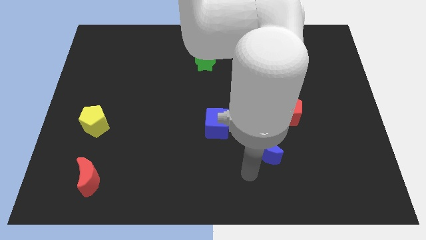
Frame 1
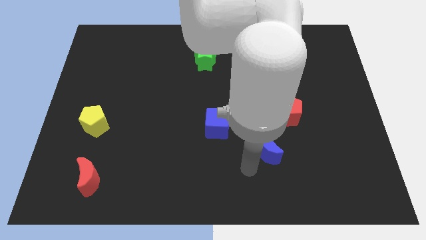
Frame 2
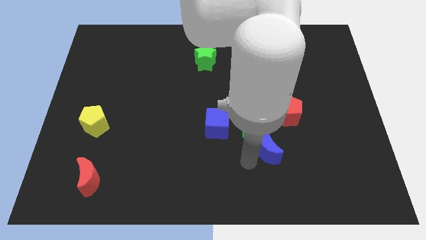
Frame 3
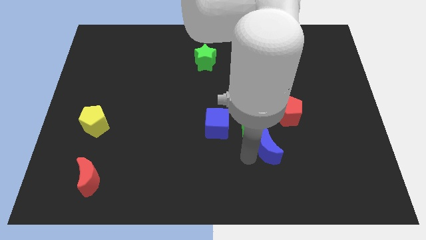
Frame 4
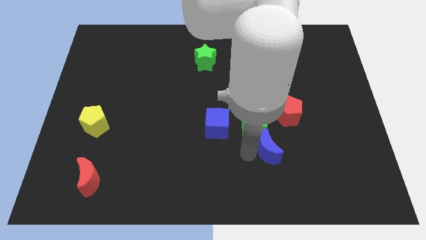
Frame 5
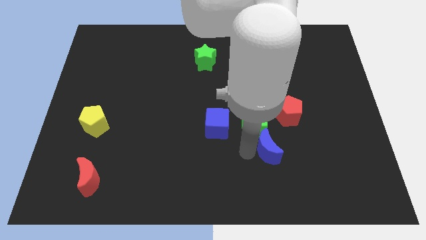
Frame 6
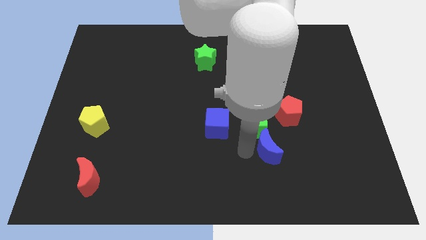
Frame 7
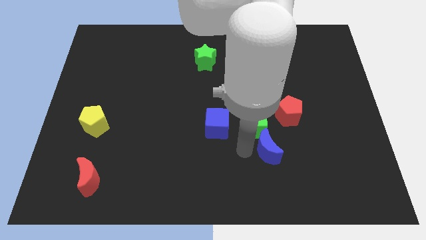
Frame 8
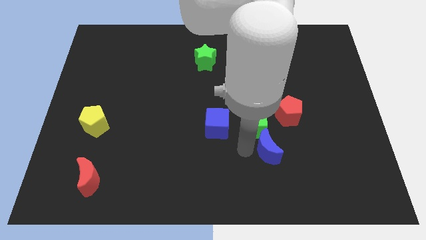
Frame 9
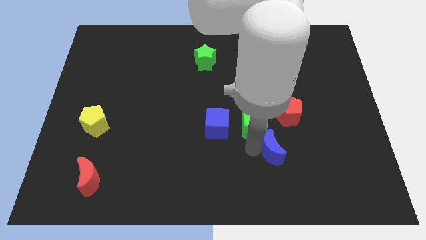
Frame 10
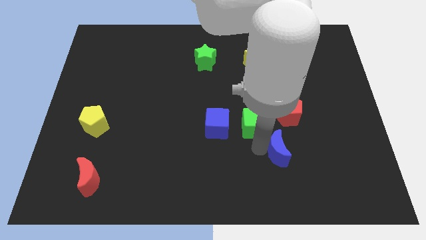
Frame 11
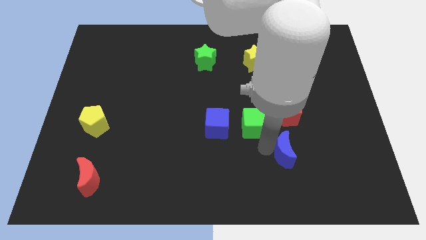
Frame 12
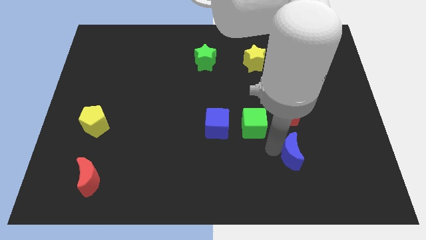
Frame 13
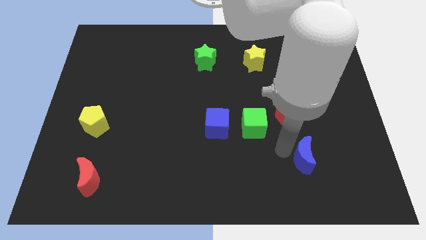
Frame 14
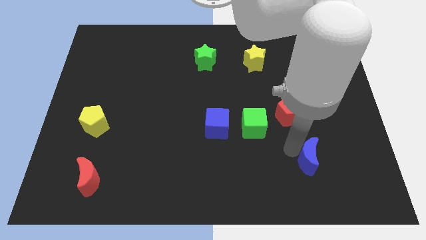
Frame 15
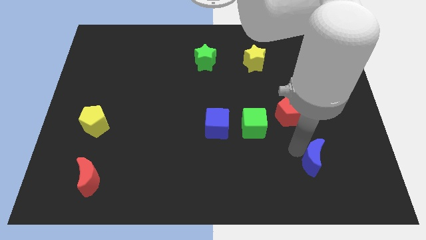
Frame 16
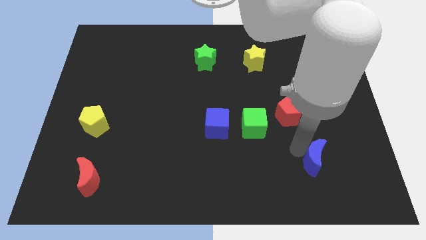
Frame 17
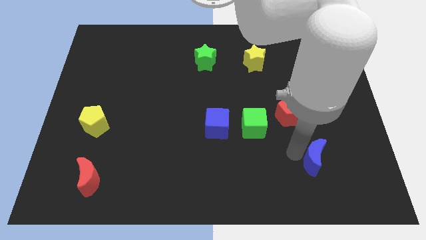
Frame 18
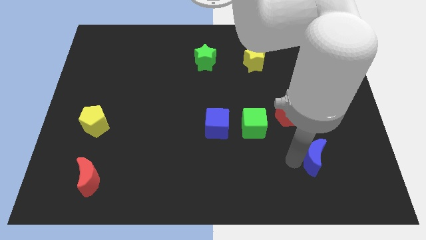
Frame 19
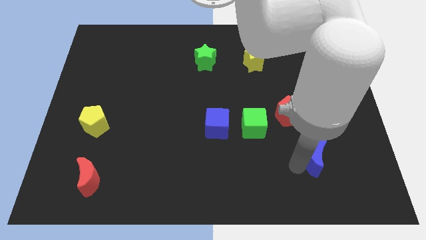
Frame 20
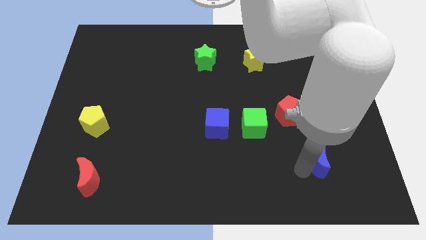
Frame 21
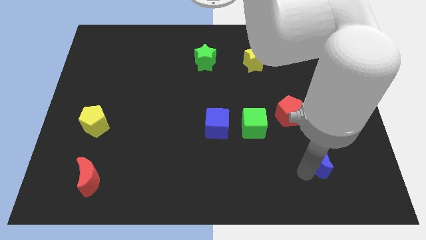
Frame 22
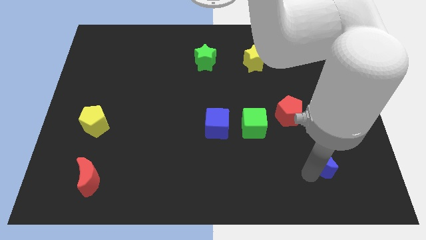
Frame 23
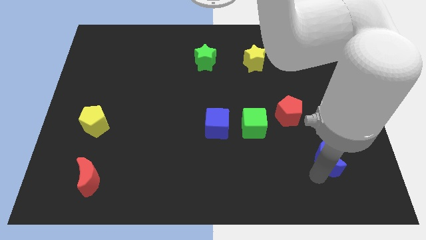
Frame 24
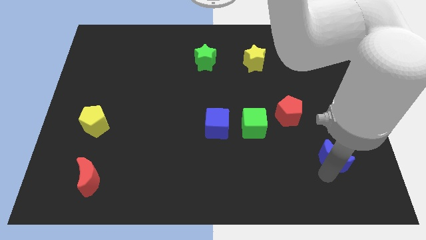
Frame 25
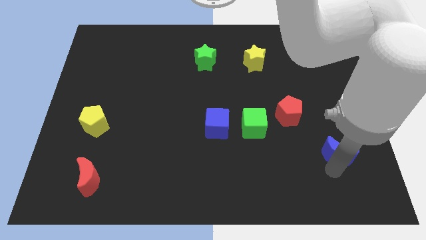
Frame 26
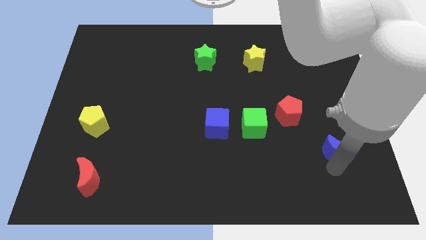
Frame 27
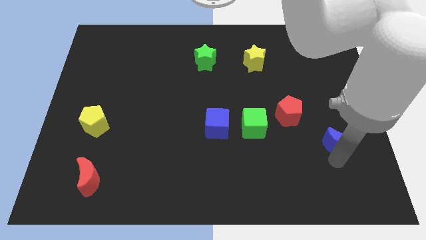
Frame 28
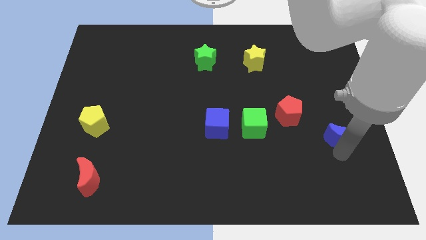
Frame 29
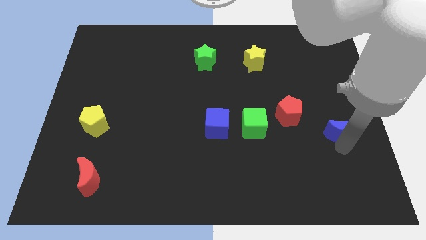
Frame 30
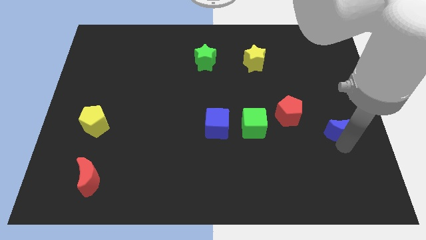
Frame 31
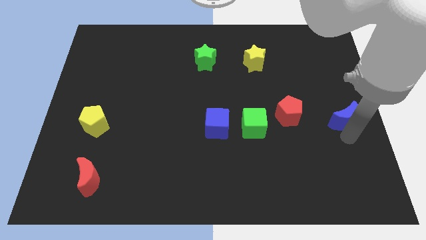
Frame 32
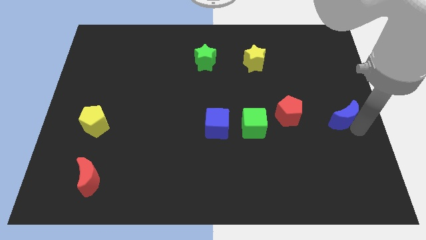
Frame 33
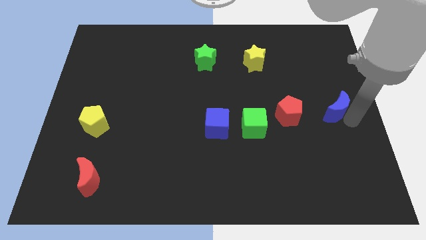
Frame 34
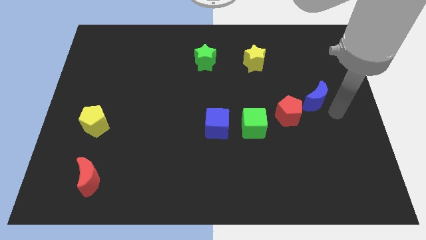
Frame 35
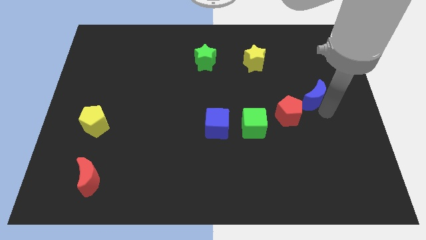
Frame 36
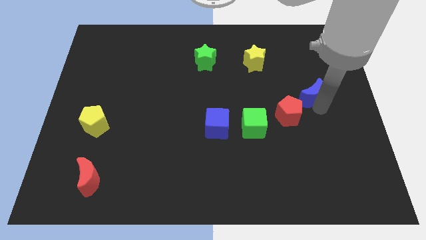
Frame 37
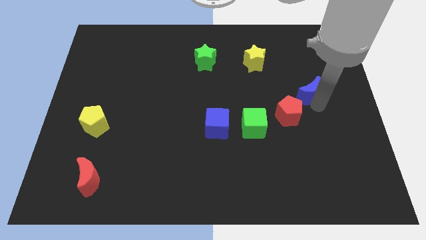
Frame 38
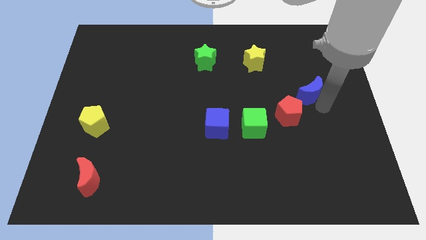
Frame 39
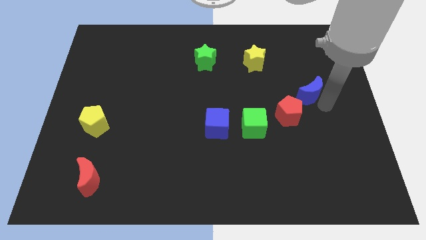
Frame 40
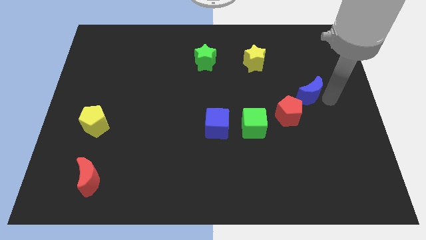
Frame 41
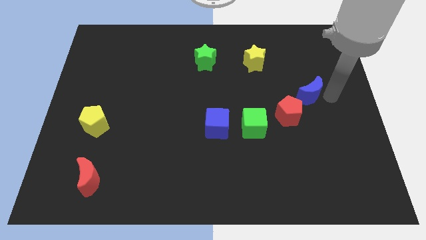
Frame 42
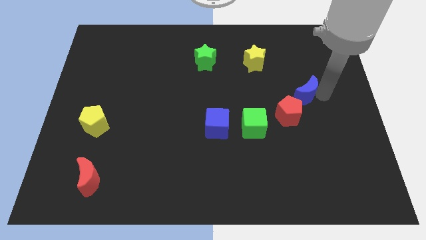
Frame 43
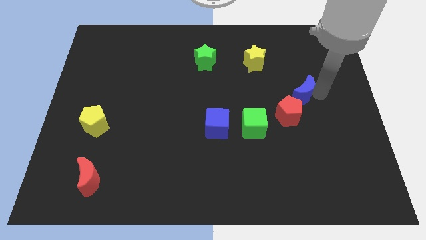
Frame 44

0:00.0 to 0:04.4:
move the blue moon to the top right of the red pentagon

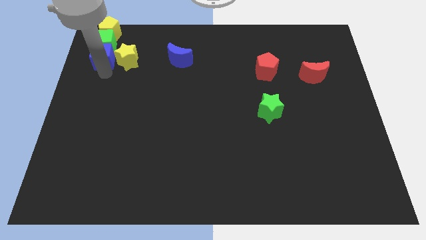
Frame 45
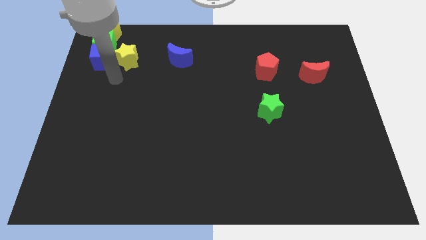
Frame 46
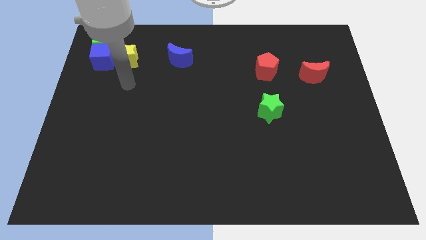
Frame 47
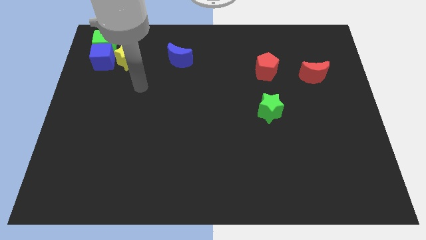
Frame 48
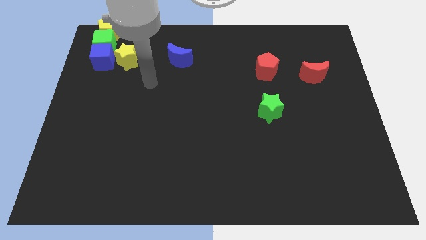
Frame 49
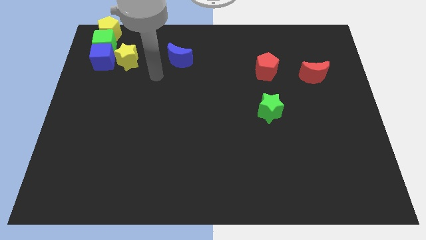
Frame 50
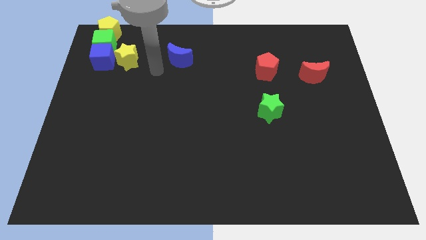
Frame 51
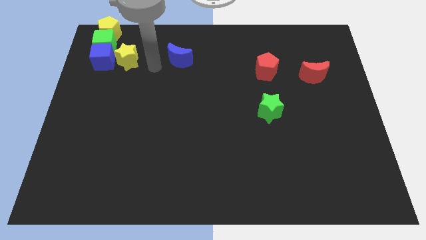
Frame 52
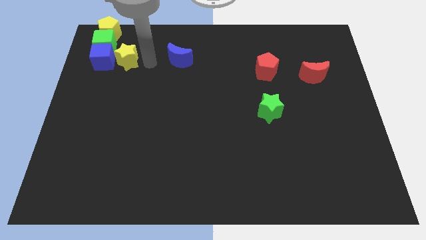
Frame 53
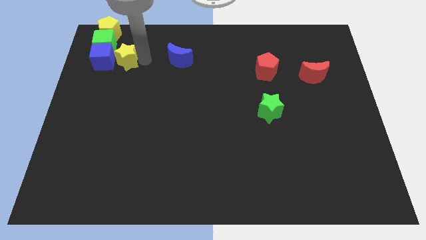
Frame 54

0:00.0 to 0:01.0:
place the arm close to the yellow star

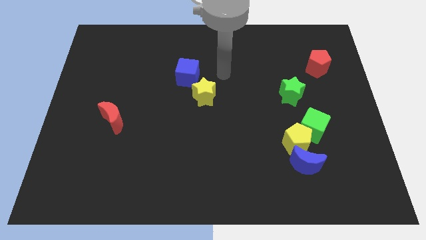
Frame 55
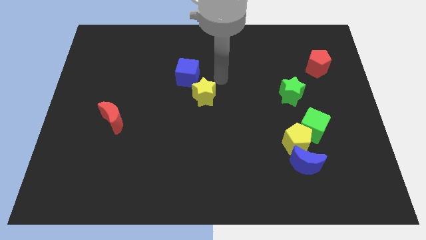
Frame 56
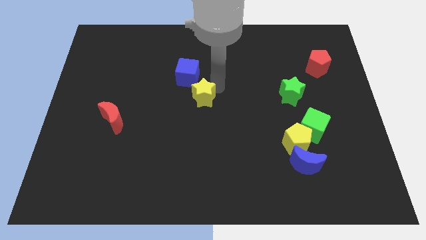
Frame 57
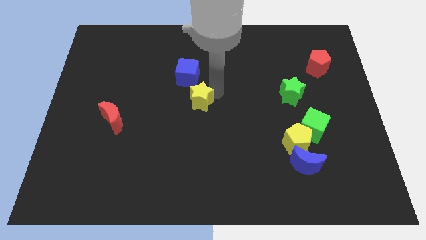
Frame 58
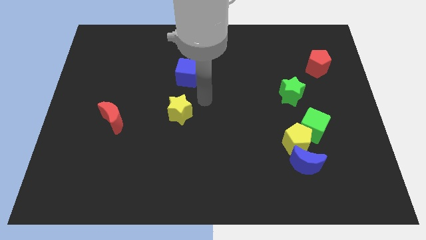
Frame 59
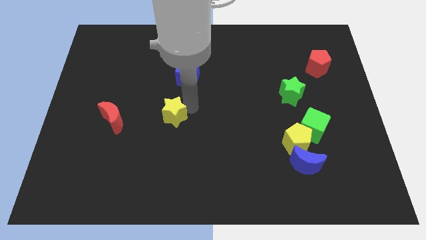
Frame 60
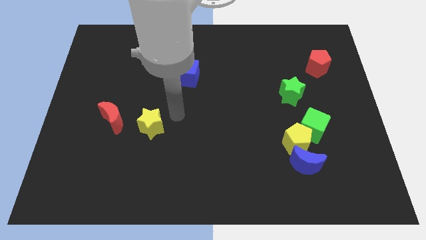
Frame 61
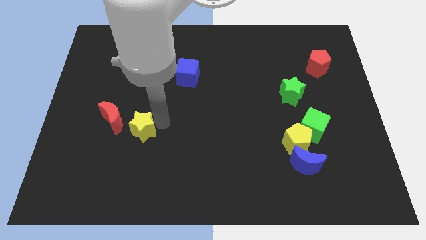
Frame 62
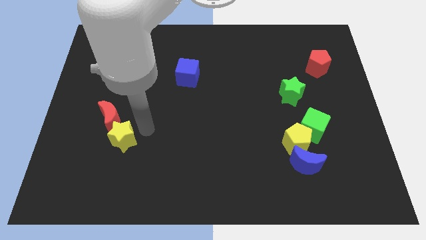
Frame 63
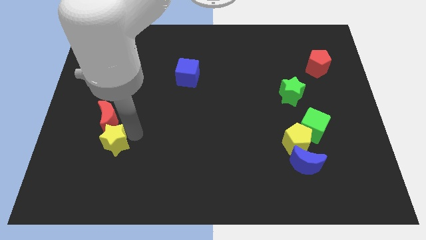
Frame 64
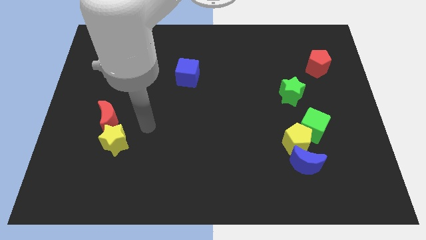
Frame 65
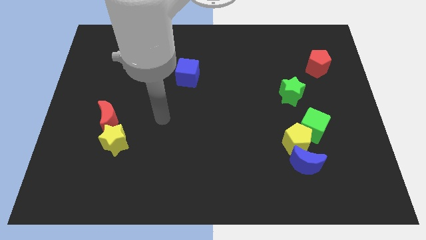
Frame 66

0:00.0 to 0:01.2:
place the yellow star towards the red crescent

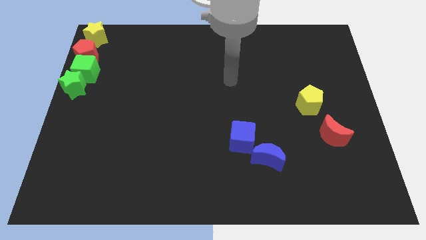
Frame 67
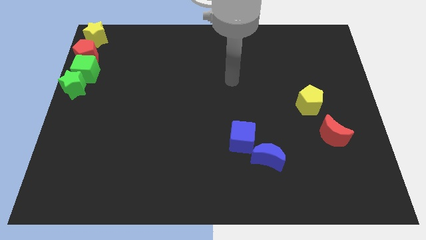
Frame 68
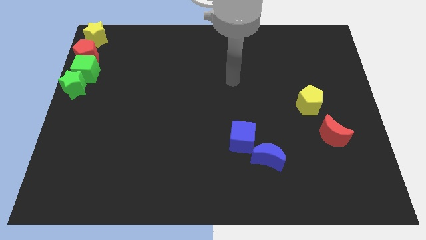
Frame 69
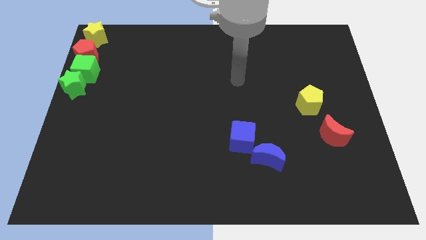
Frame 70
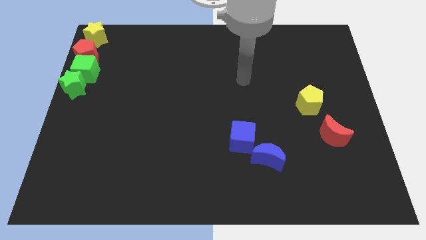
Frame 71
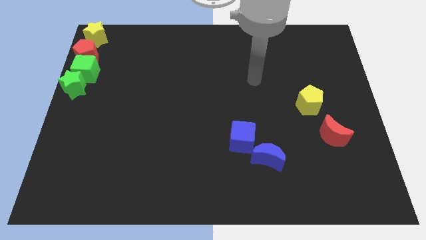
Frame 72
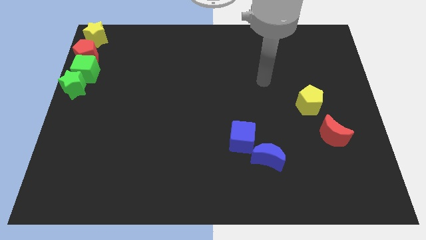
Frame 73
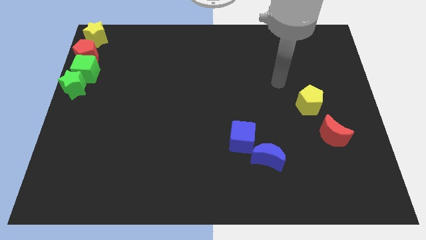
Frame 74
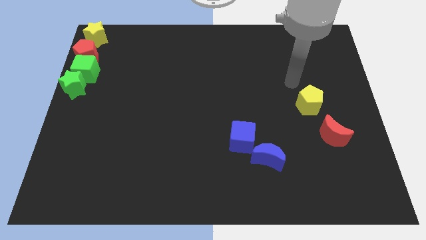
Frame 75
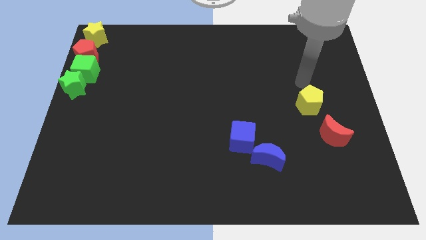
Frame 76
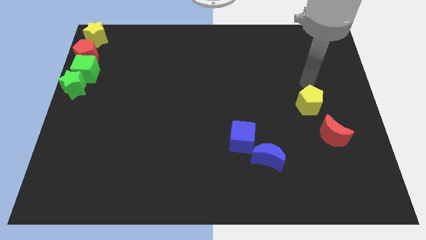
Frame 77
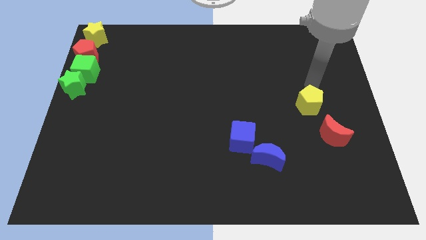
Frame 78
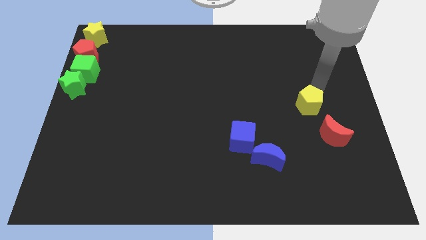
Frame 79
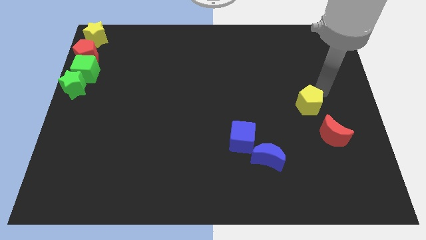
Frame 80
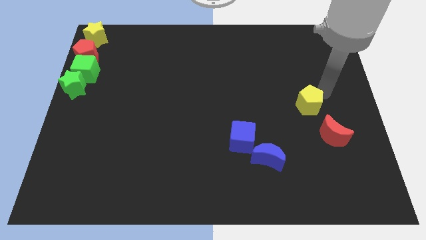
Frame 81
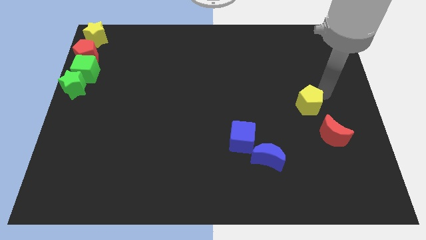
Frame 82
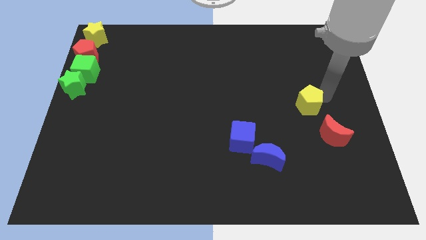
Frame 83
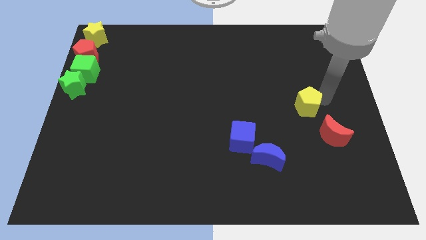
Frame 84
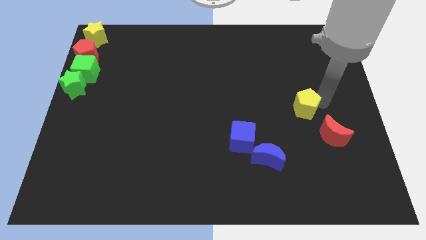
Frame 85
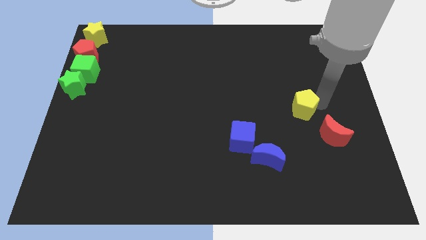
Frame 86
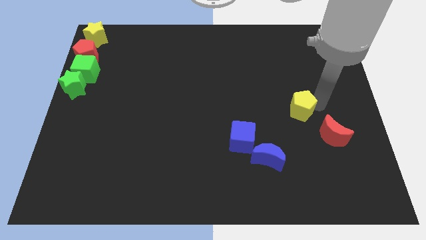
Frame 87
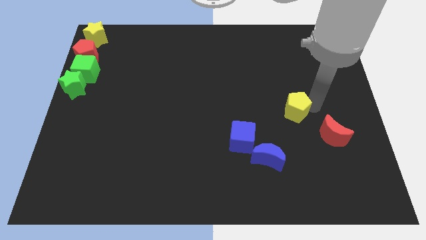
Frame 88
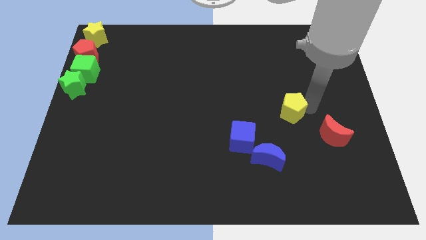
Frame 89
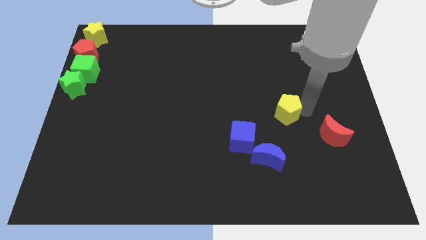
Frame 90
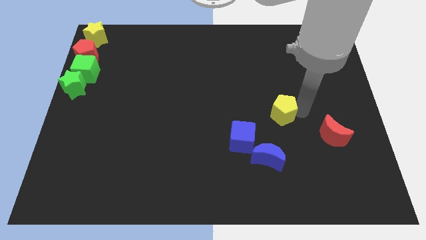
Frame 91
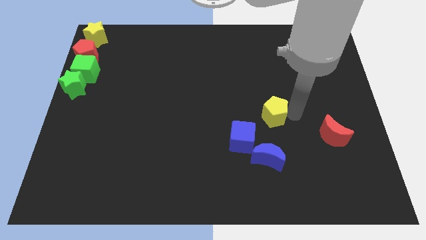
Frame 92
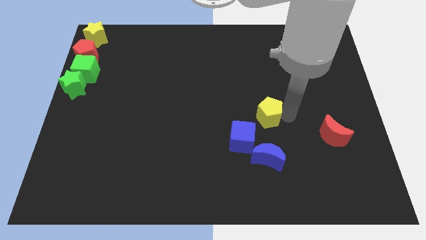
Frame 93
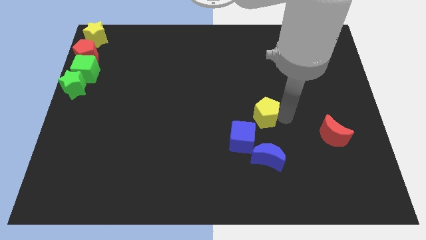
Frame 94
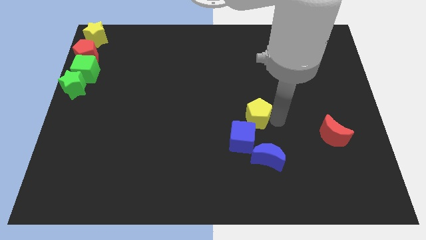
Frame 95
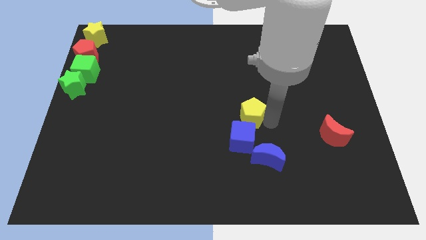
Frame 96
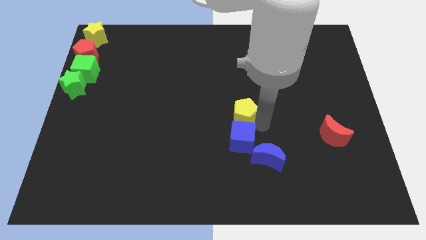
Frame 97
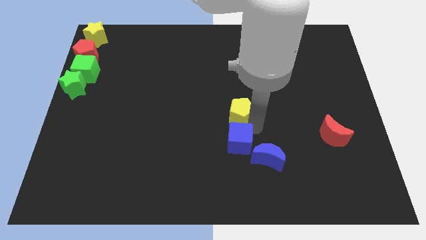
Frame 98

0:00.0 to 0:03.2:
place the yellow pentagon at the top of blue cube
